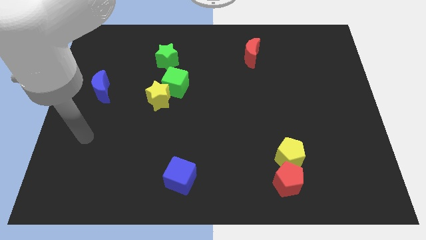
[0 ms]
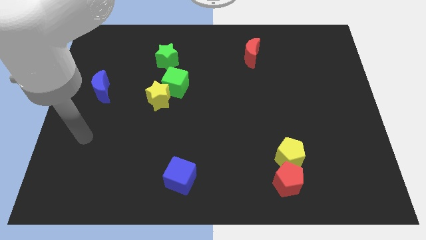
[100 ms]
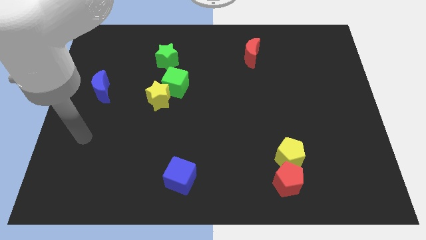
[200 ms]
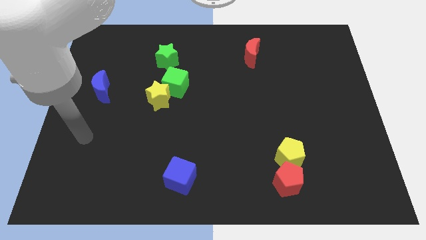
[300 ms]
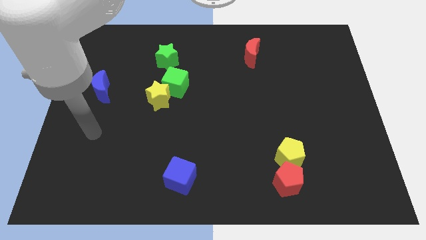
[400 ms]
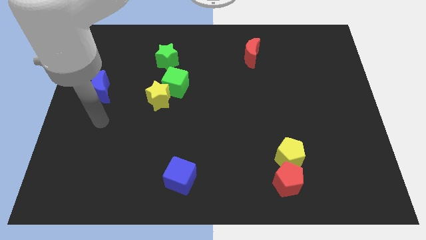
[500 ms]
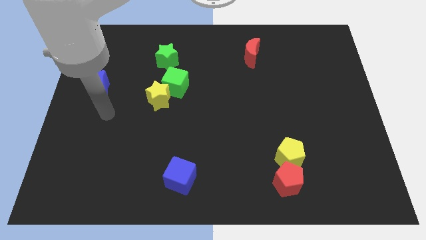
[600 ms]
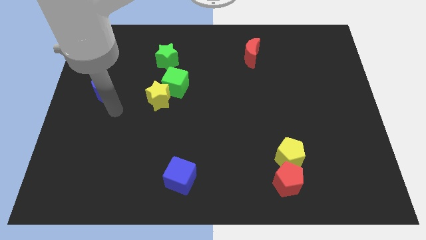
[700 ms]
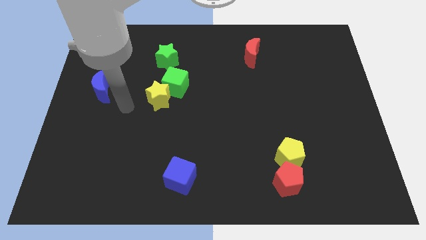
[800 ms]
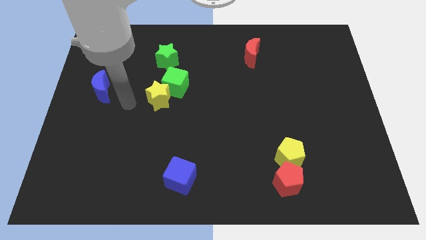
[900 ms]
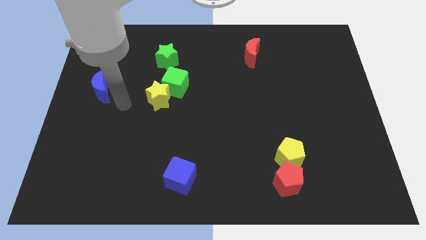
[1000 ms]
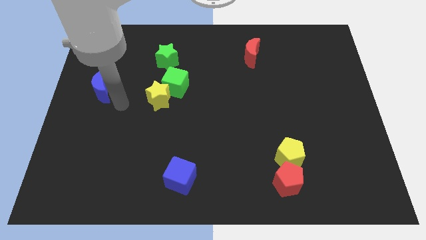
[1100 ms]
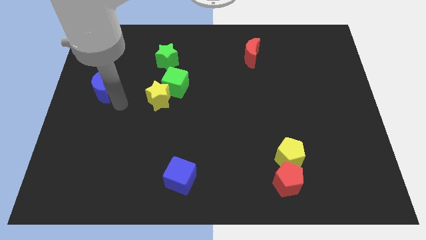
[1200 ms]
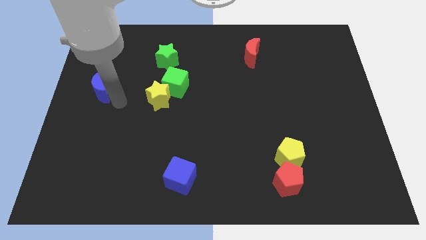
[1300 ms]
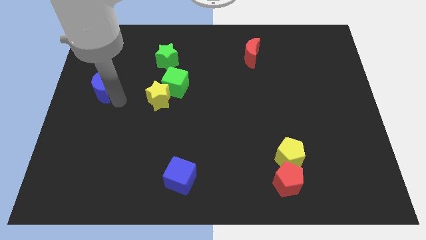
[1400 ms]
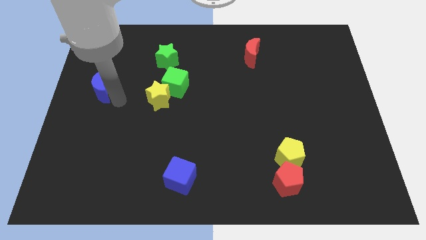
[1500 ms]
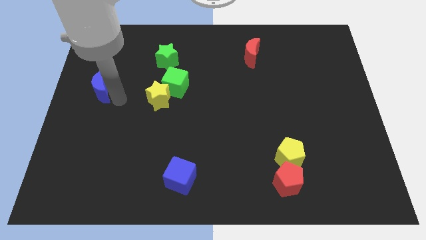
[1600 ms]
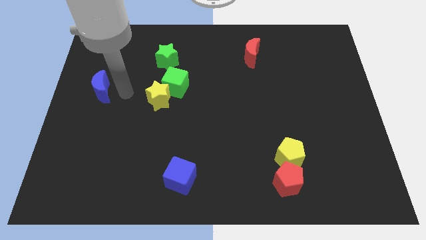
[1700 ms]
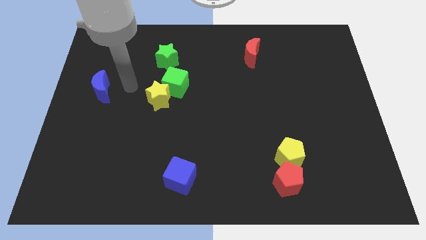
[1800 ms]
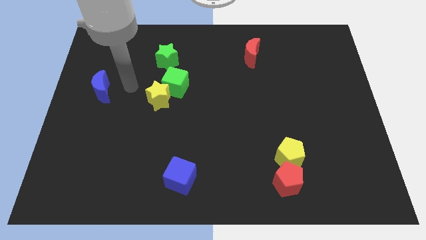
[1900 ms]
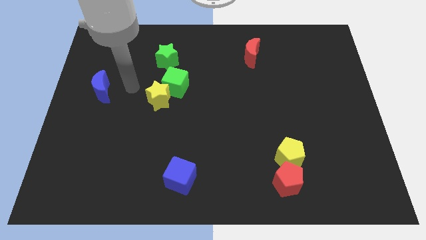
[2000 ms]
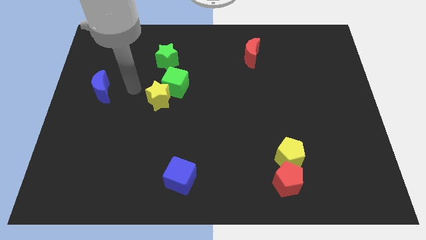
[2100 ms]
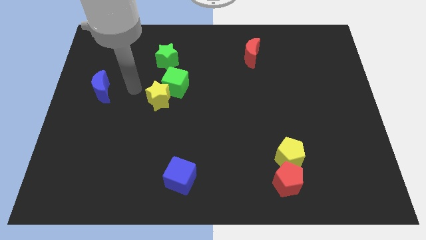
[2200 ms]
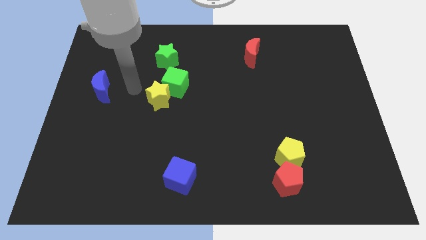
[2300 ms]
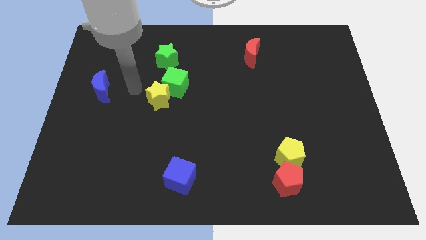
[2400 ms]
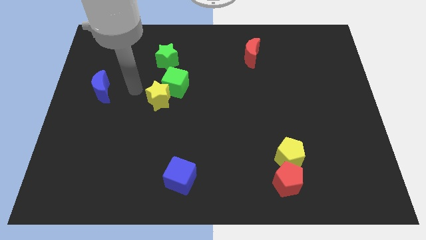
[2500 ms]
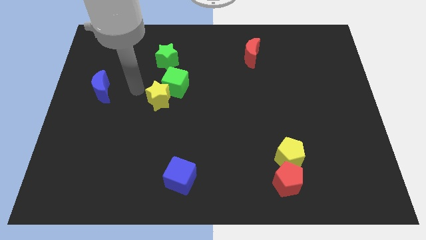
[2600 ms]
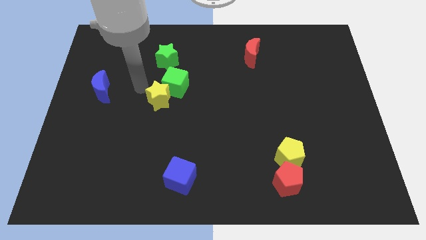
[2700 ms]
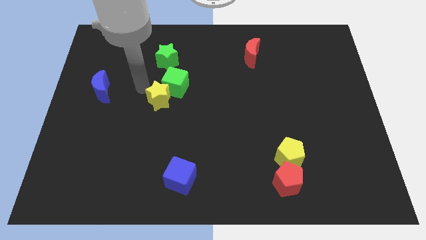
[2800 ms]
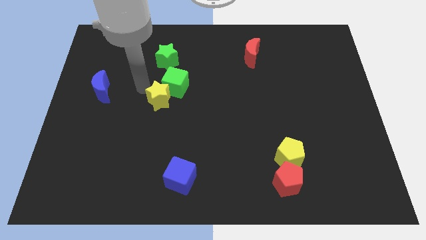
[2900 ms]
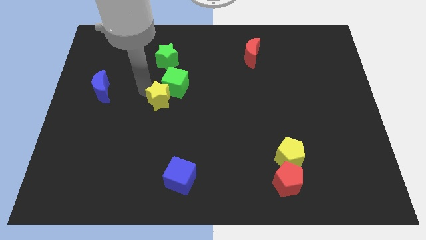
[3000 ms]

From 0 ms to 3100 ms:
place the arm diagonally to the yellow star

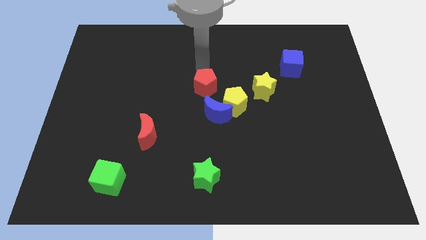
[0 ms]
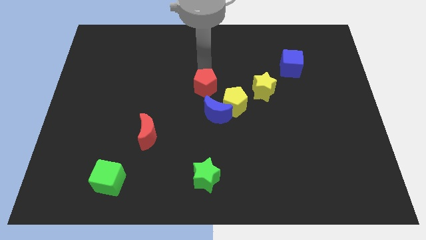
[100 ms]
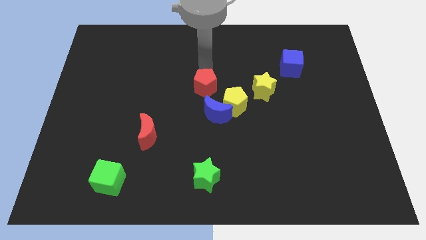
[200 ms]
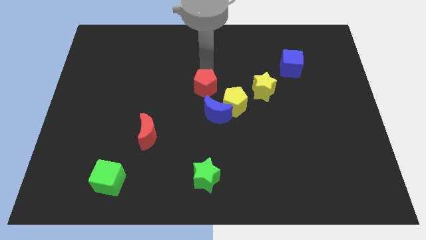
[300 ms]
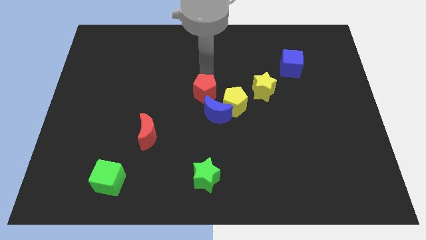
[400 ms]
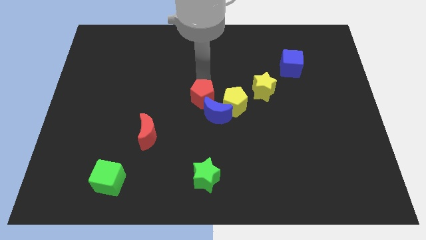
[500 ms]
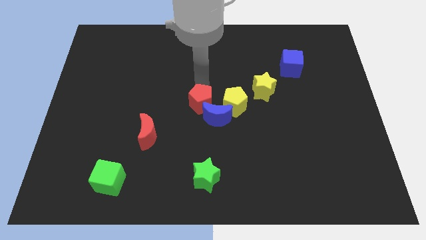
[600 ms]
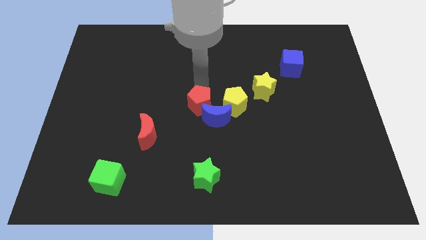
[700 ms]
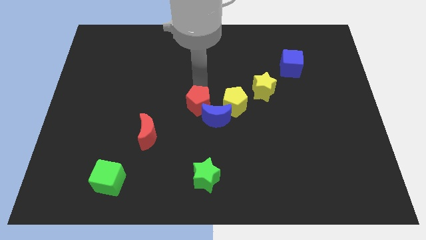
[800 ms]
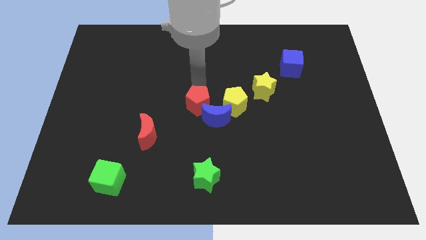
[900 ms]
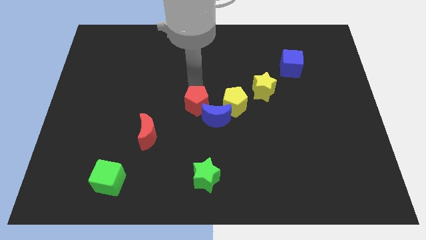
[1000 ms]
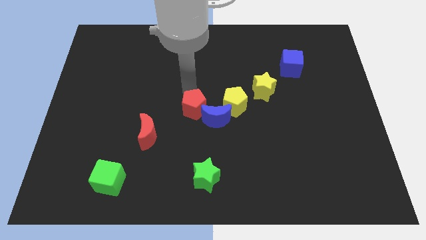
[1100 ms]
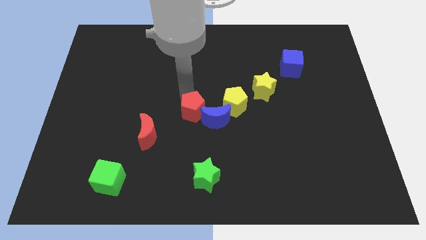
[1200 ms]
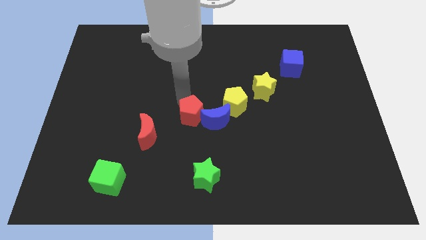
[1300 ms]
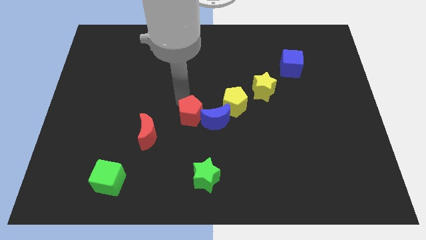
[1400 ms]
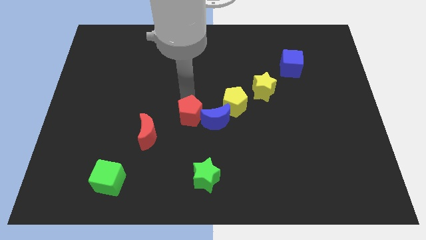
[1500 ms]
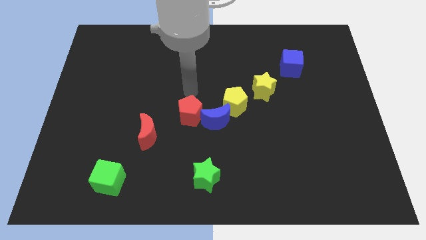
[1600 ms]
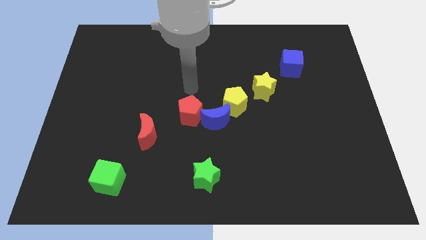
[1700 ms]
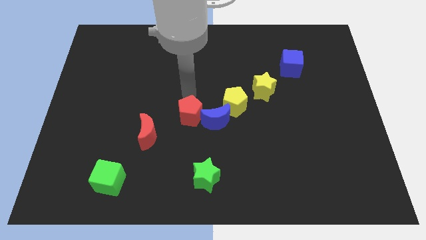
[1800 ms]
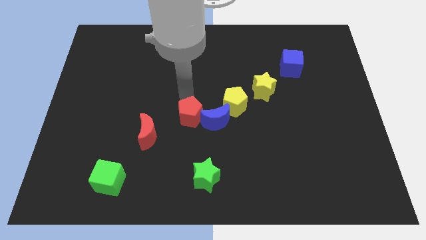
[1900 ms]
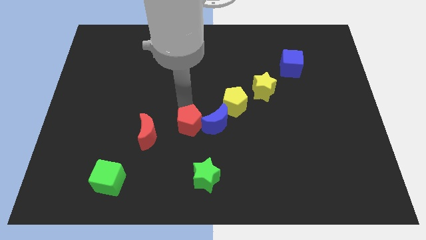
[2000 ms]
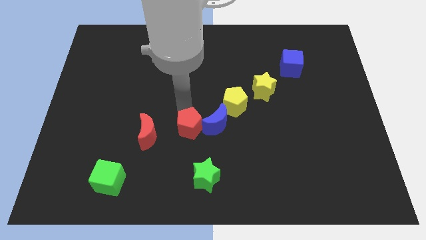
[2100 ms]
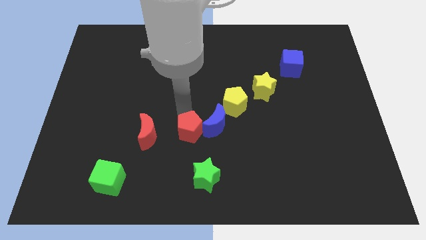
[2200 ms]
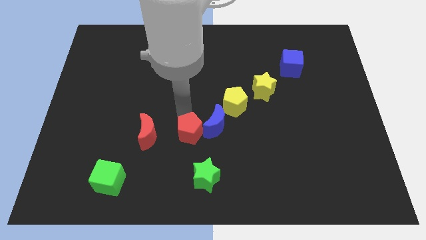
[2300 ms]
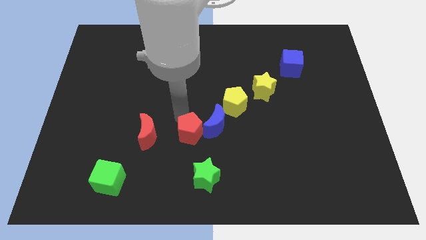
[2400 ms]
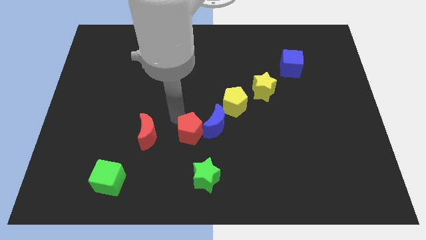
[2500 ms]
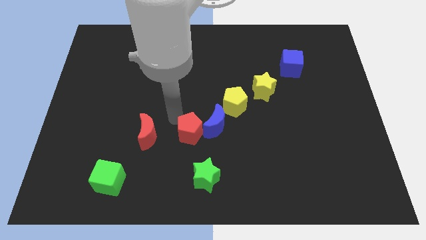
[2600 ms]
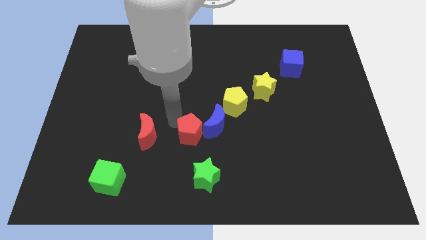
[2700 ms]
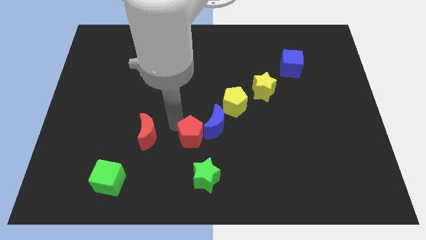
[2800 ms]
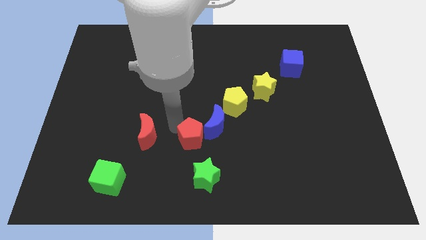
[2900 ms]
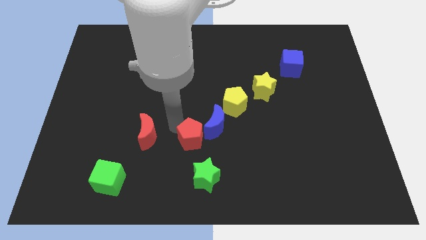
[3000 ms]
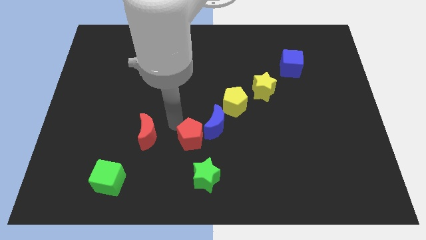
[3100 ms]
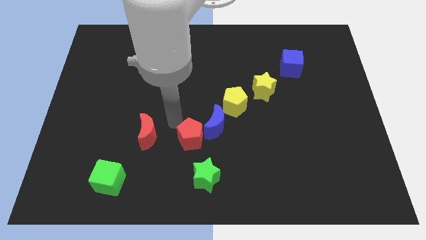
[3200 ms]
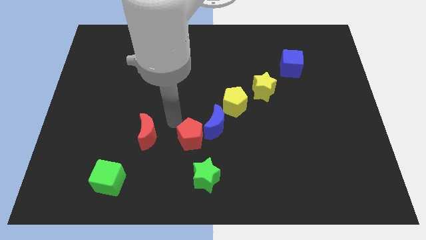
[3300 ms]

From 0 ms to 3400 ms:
place the red pentagon to the right of the red moon

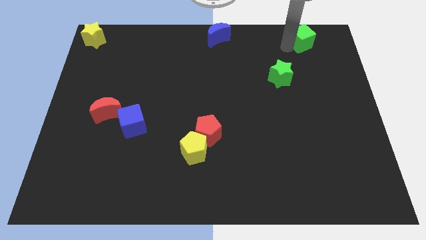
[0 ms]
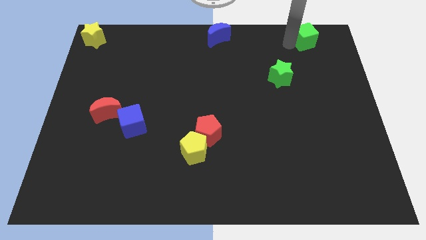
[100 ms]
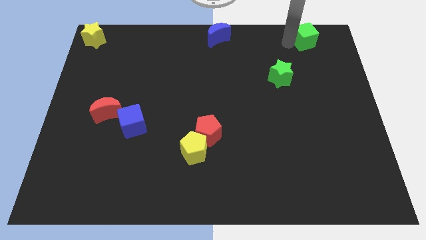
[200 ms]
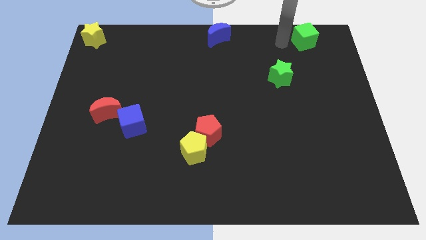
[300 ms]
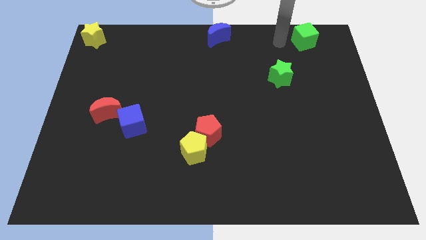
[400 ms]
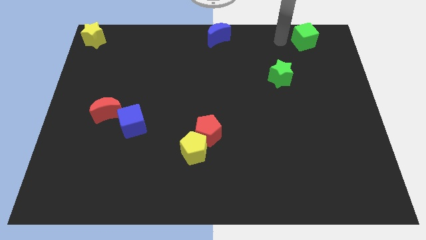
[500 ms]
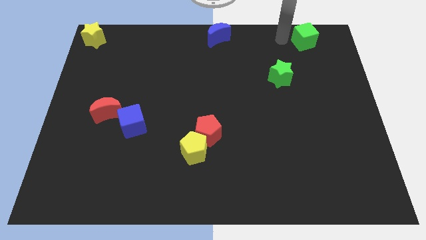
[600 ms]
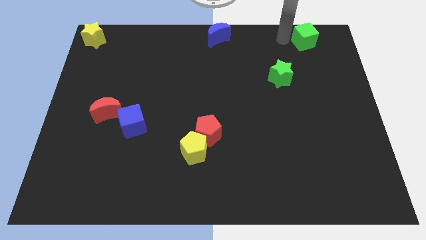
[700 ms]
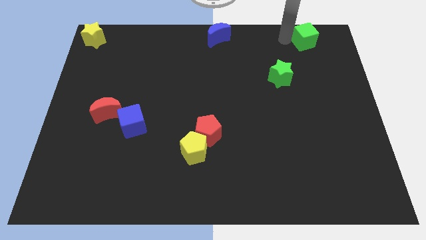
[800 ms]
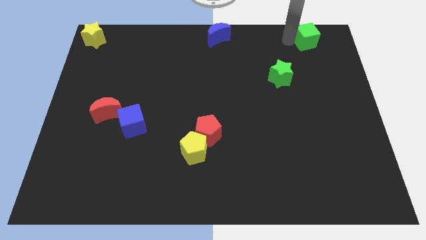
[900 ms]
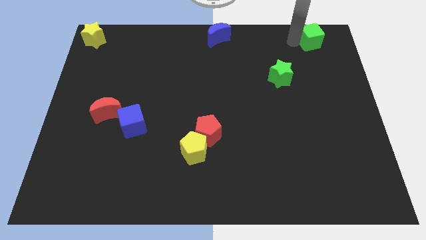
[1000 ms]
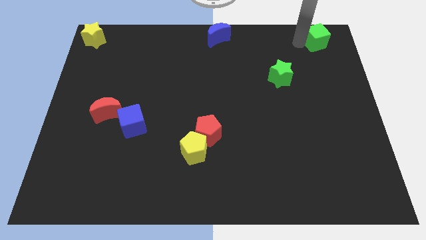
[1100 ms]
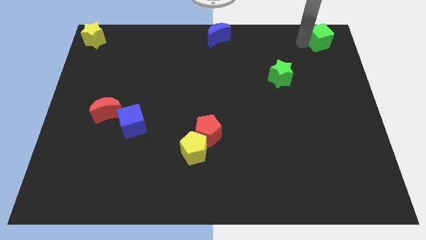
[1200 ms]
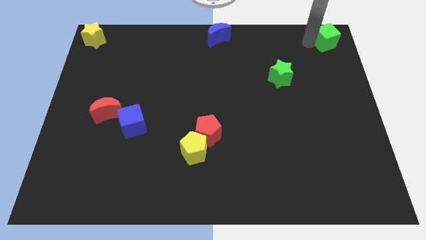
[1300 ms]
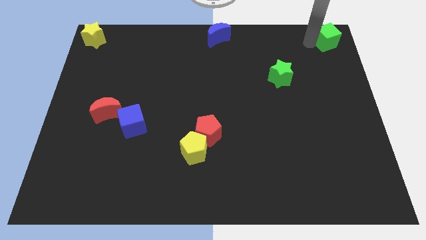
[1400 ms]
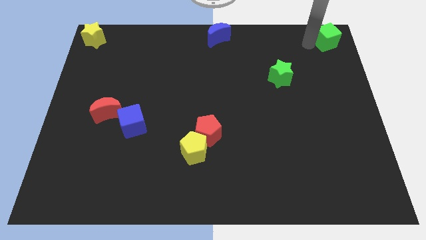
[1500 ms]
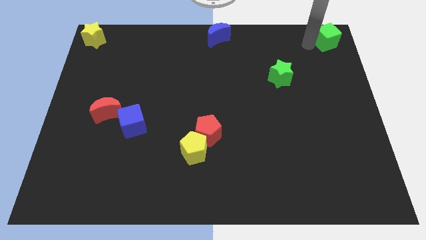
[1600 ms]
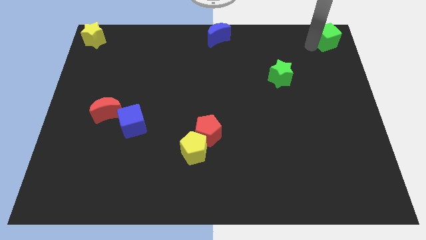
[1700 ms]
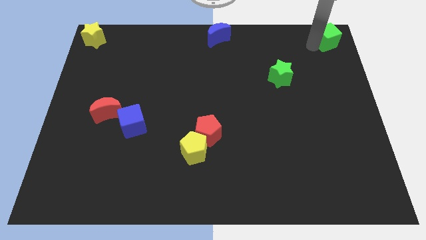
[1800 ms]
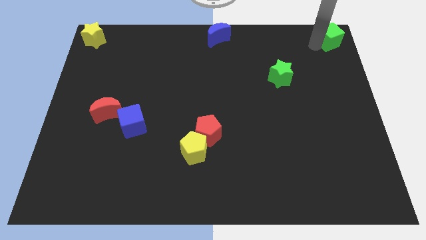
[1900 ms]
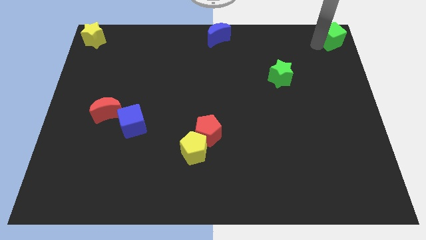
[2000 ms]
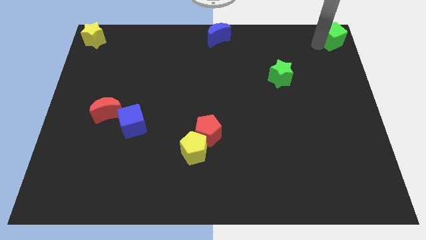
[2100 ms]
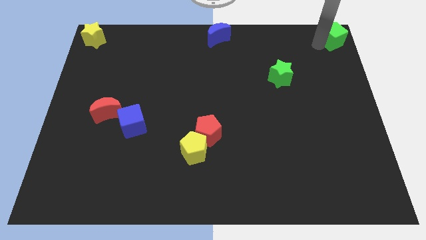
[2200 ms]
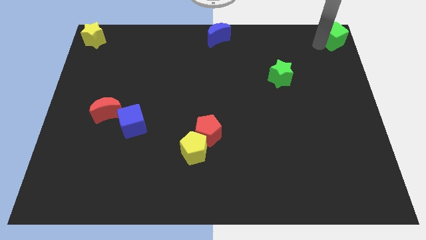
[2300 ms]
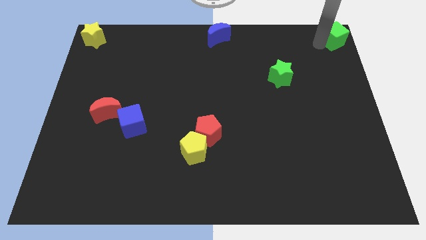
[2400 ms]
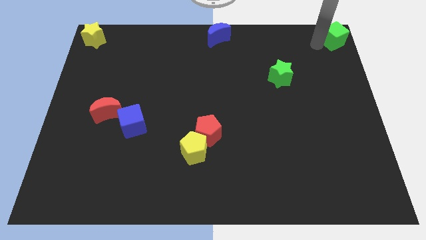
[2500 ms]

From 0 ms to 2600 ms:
push the green cube at the top right corner of the board
